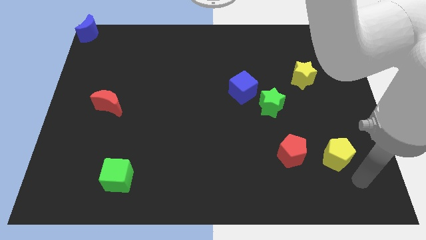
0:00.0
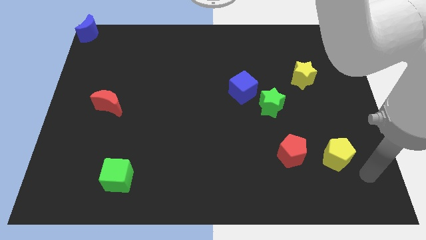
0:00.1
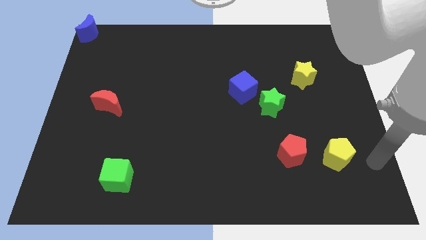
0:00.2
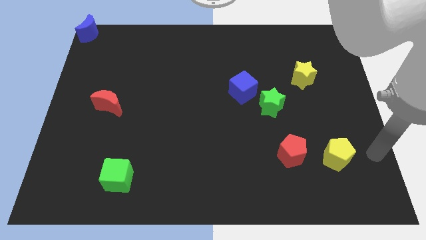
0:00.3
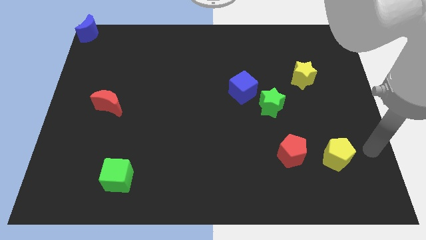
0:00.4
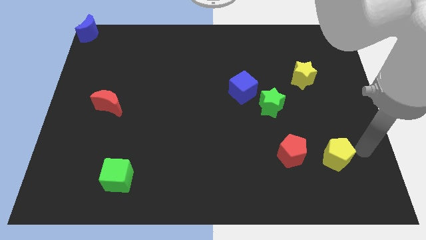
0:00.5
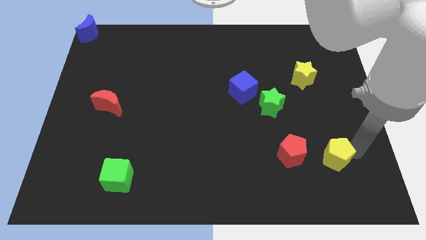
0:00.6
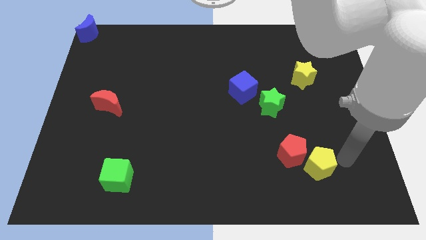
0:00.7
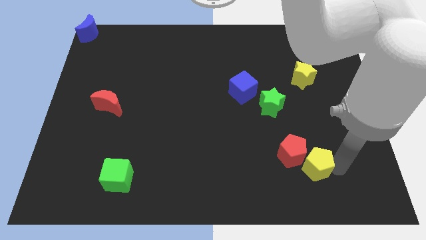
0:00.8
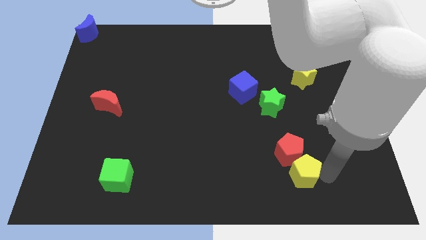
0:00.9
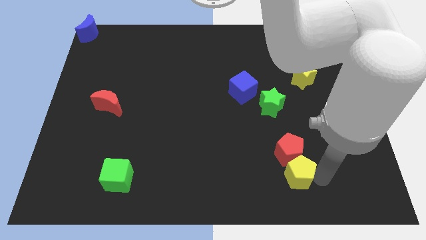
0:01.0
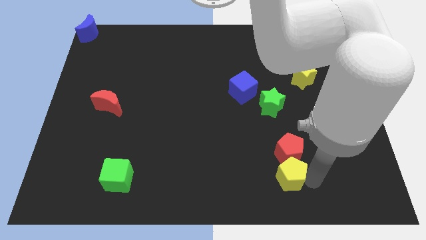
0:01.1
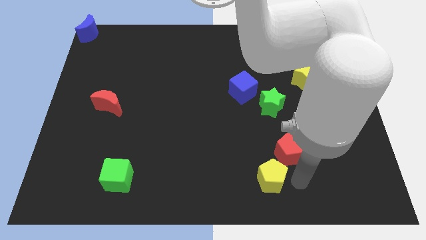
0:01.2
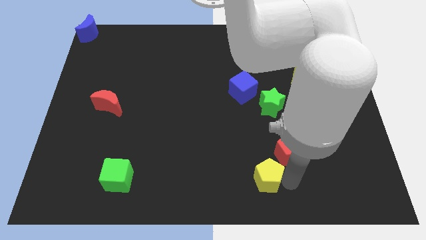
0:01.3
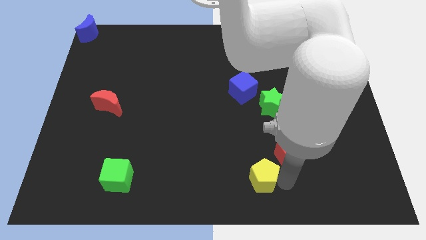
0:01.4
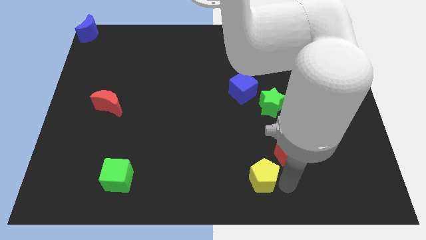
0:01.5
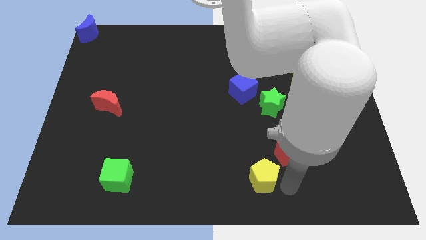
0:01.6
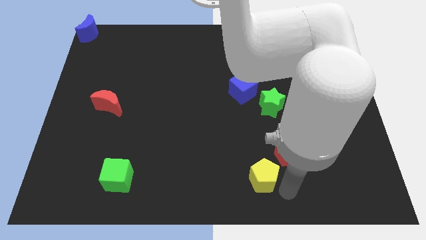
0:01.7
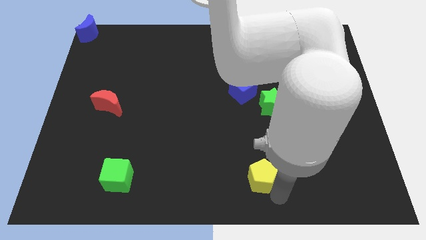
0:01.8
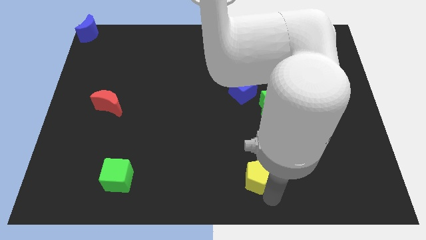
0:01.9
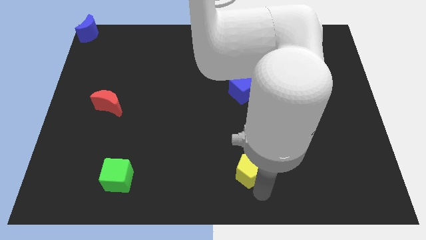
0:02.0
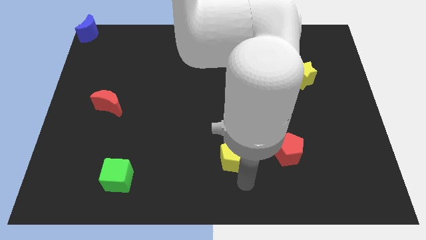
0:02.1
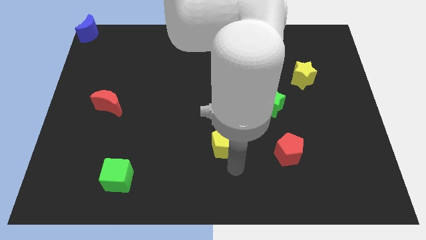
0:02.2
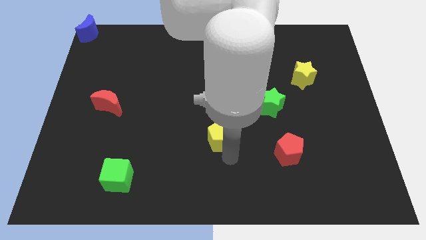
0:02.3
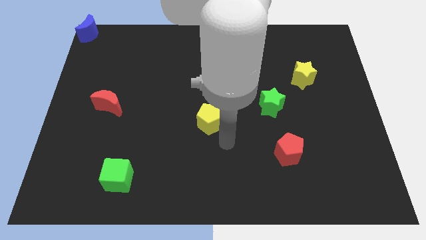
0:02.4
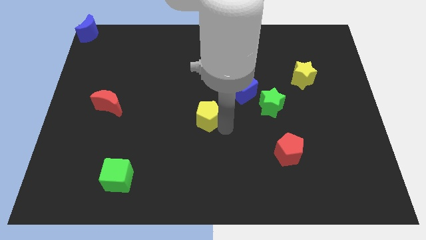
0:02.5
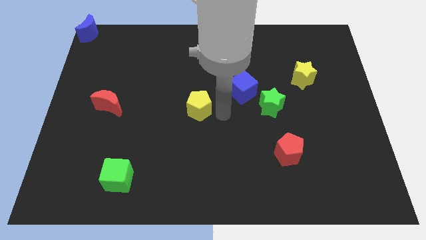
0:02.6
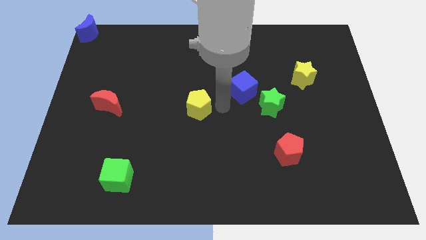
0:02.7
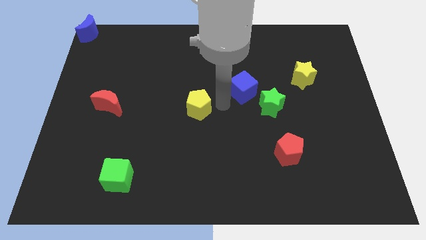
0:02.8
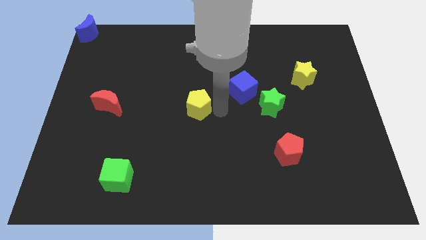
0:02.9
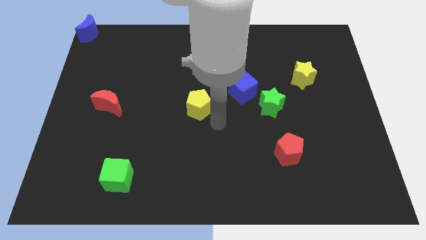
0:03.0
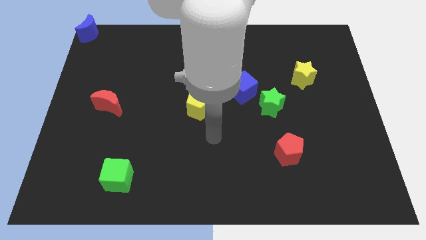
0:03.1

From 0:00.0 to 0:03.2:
place yellow pentagon at the center

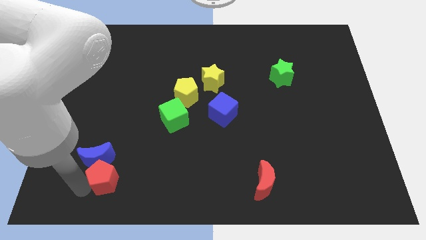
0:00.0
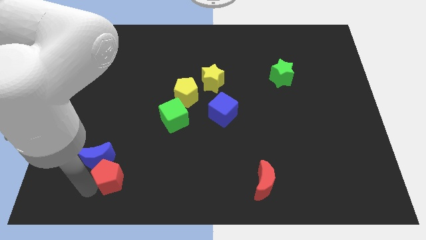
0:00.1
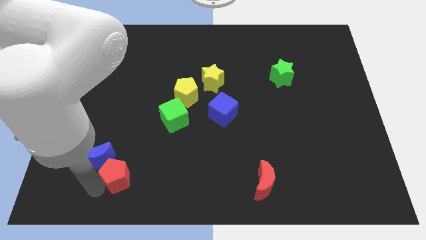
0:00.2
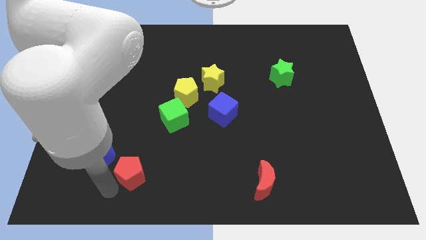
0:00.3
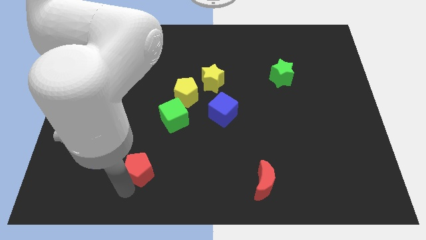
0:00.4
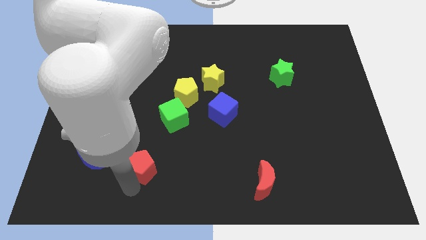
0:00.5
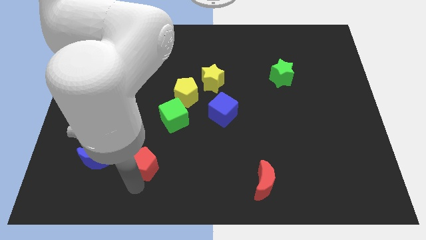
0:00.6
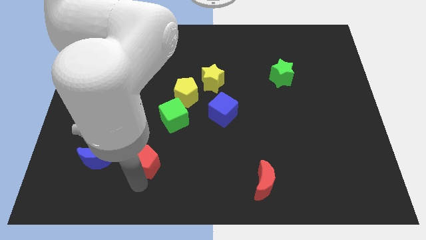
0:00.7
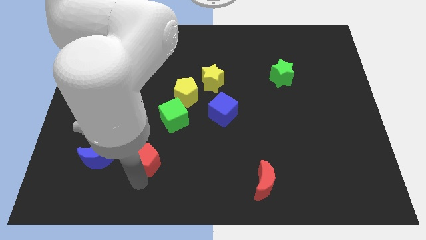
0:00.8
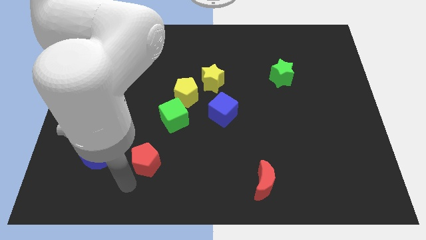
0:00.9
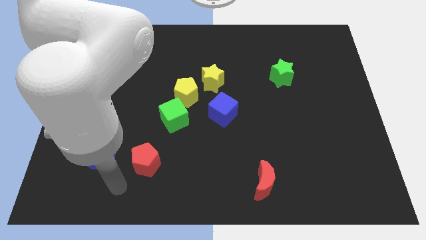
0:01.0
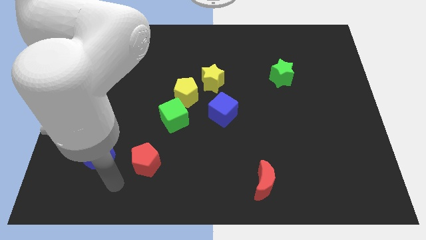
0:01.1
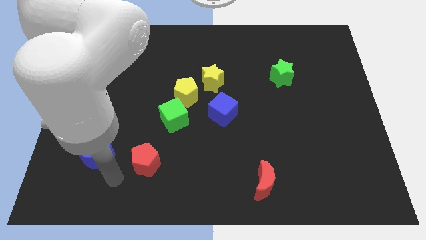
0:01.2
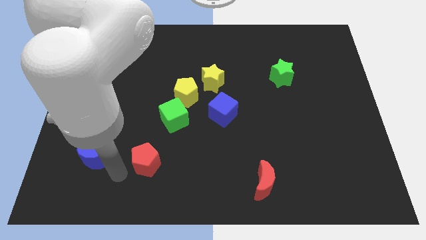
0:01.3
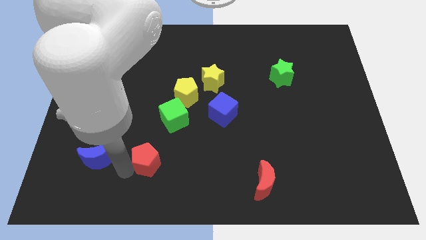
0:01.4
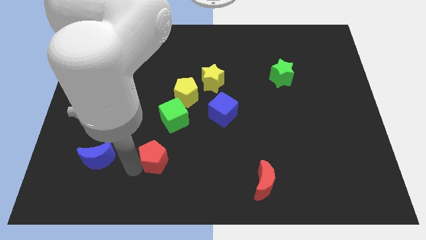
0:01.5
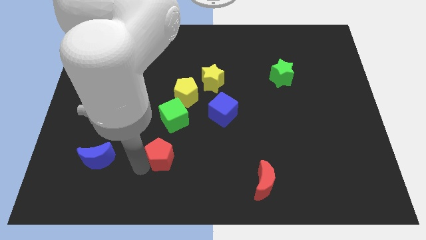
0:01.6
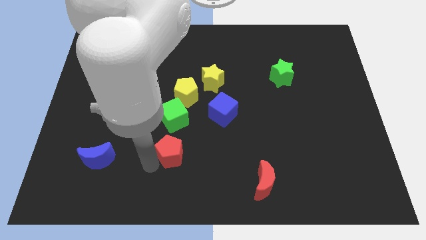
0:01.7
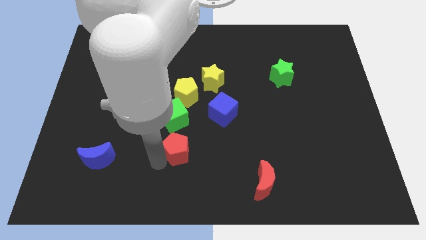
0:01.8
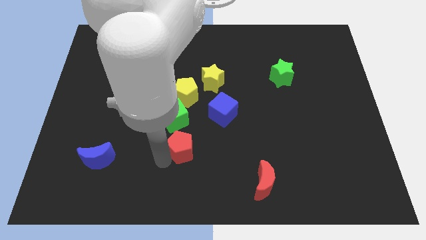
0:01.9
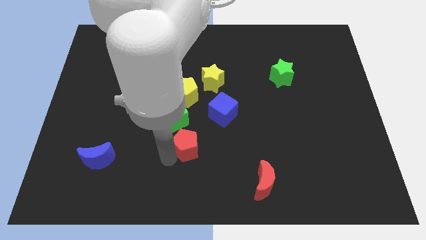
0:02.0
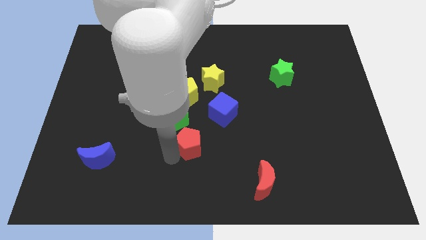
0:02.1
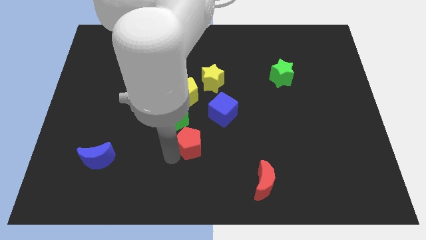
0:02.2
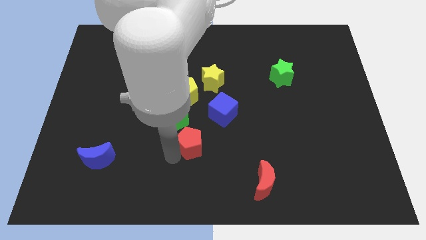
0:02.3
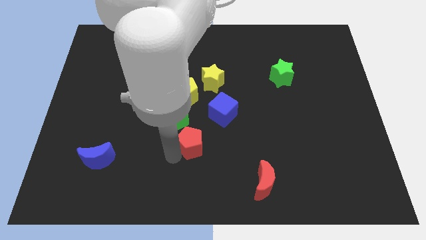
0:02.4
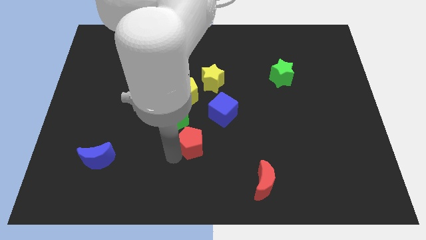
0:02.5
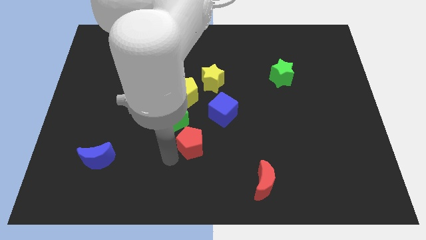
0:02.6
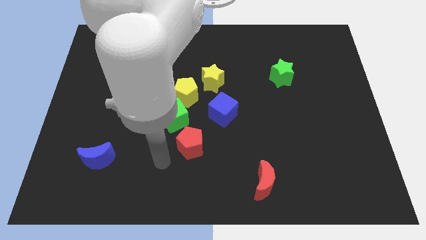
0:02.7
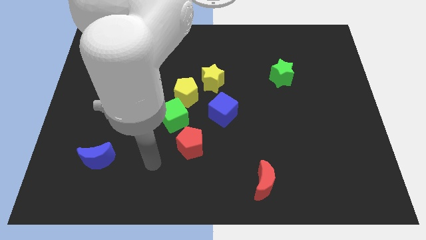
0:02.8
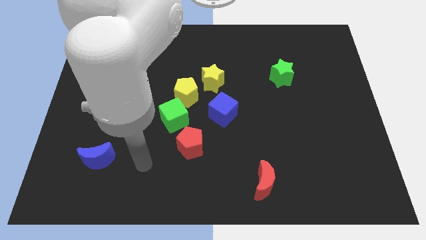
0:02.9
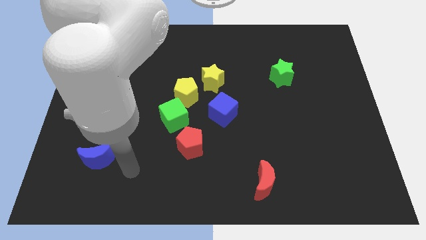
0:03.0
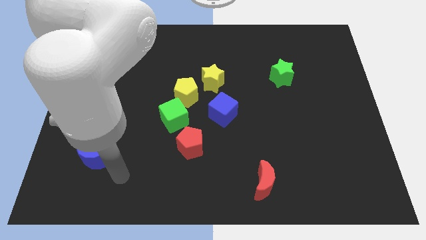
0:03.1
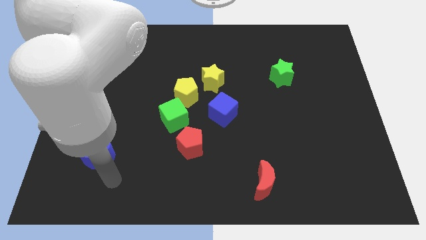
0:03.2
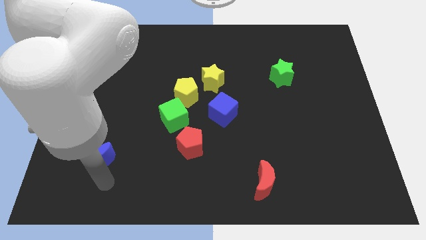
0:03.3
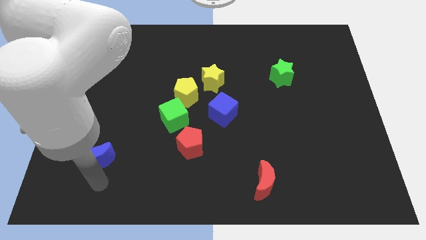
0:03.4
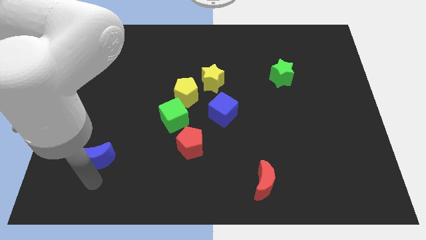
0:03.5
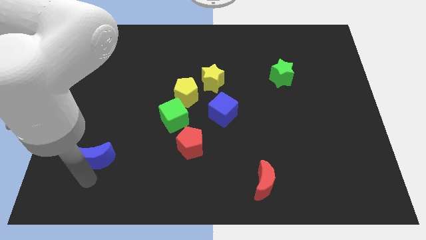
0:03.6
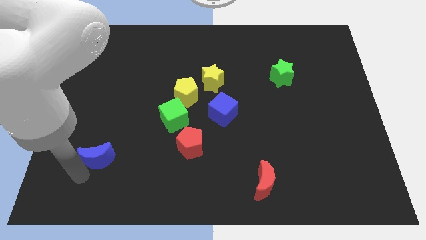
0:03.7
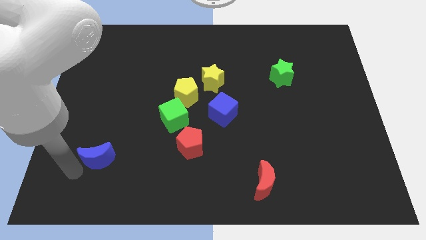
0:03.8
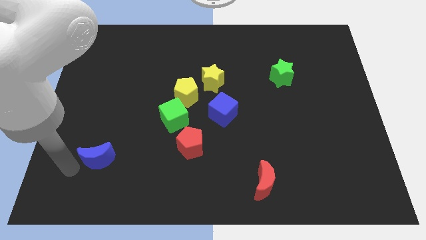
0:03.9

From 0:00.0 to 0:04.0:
move the red pentagon below right to the green cube

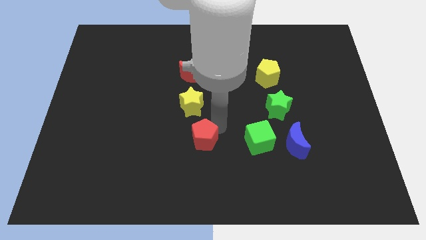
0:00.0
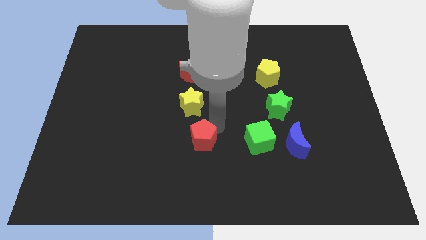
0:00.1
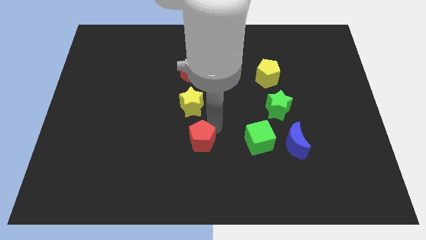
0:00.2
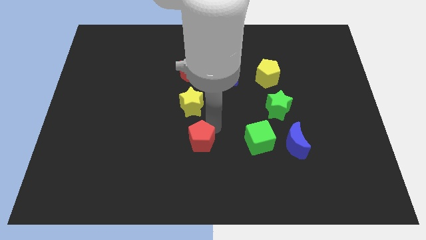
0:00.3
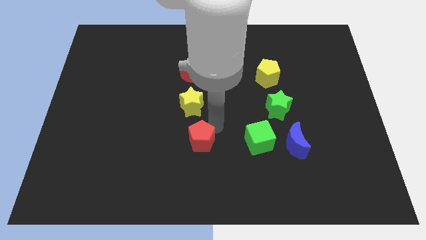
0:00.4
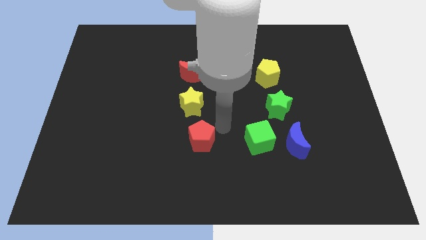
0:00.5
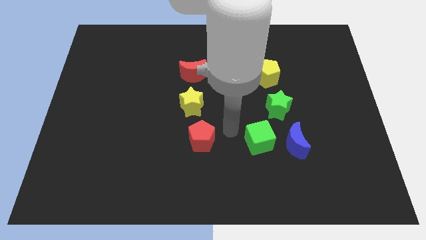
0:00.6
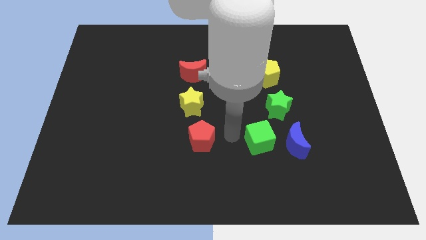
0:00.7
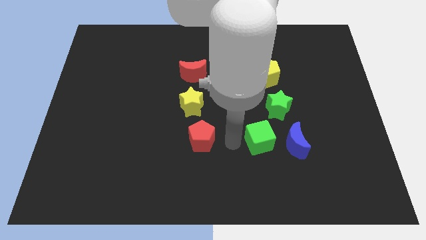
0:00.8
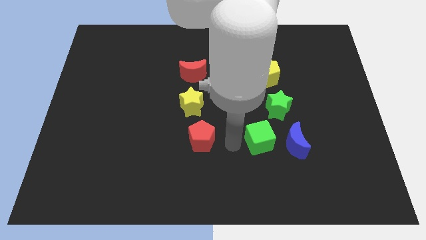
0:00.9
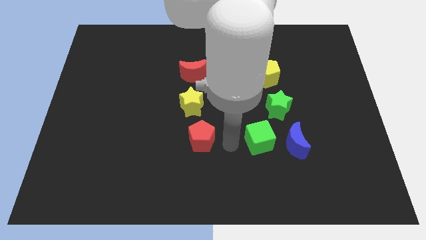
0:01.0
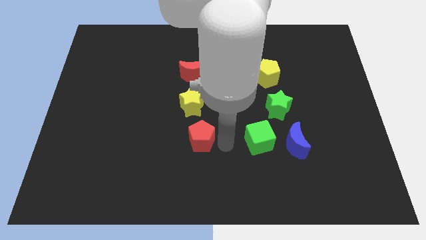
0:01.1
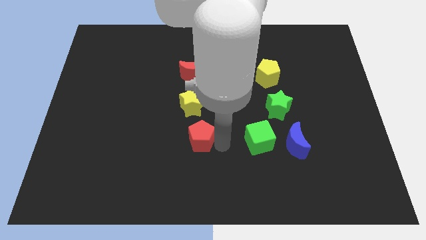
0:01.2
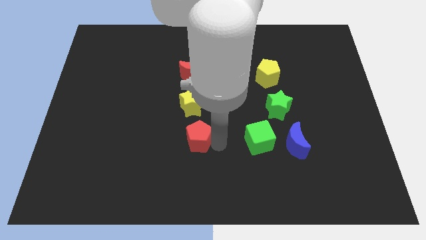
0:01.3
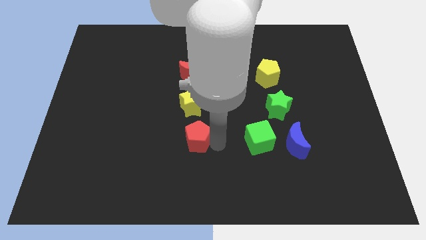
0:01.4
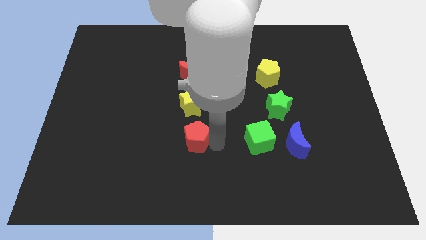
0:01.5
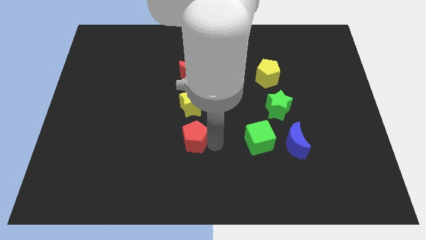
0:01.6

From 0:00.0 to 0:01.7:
adjust the red pentagon

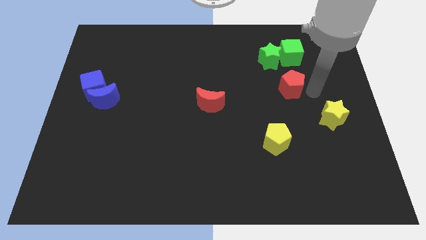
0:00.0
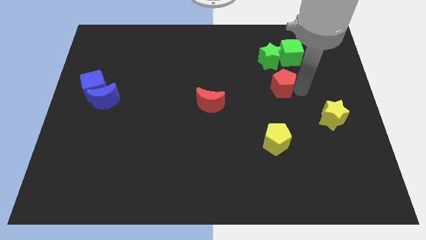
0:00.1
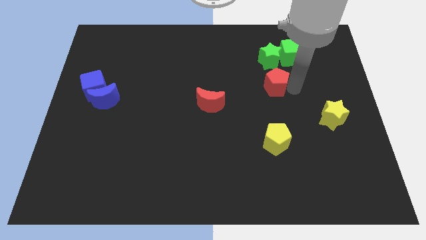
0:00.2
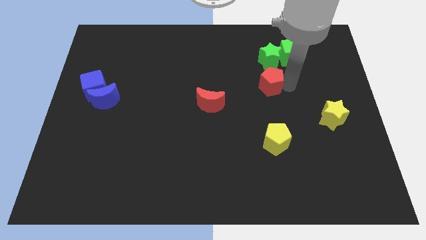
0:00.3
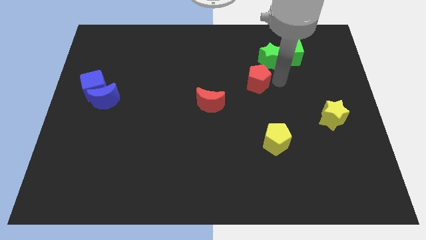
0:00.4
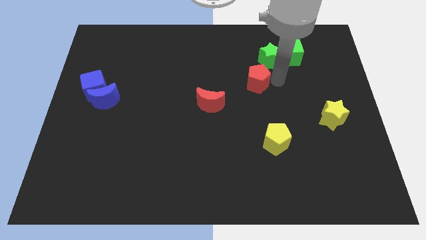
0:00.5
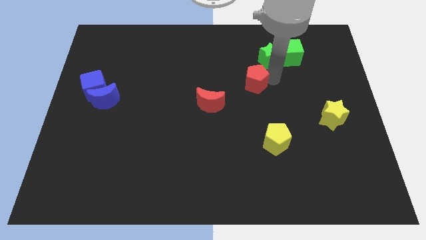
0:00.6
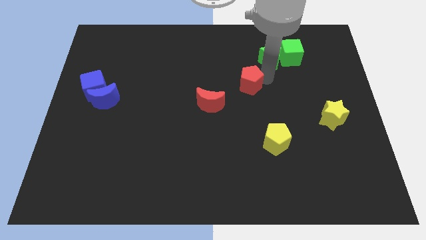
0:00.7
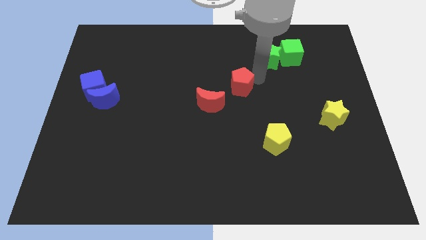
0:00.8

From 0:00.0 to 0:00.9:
push the red pentagon slightly to the left
